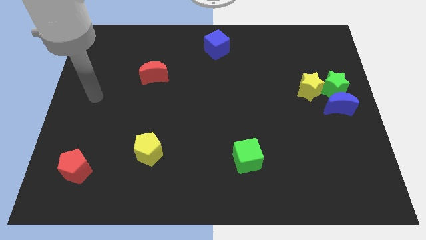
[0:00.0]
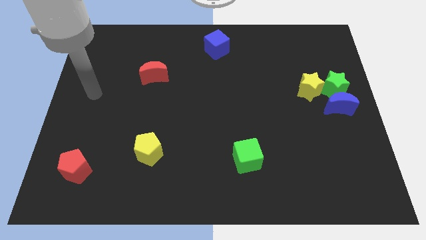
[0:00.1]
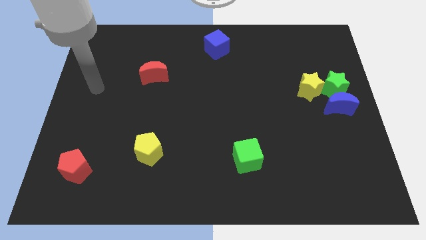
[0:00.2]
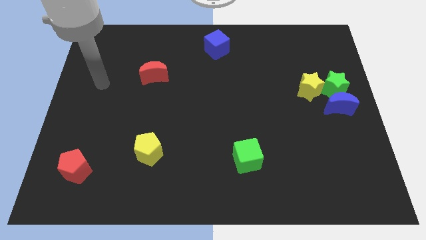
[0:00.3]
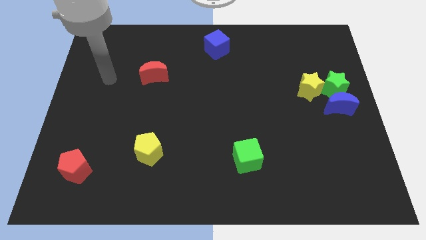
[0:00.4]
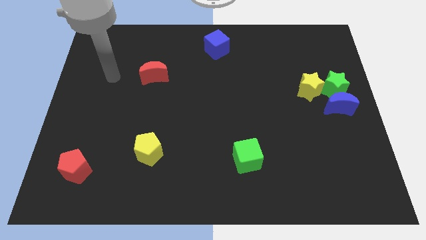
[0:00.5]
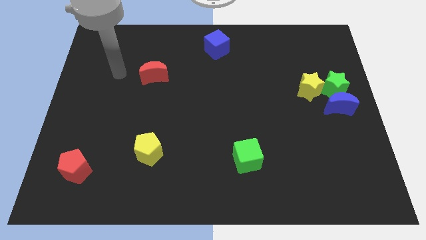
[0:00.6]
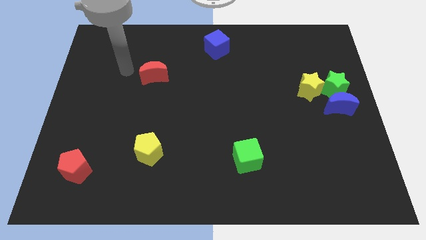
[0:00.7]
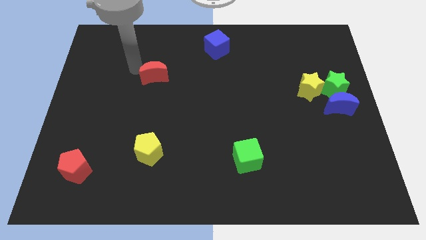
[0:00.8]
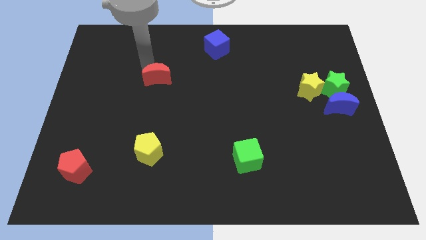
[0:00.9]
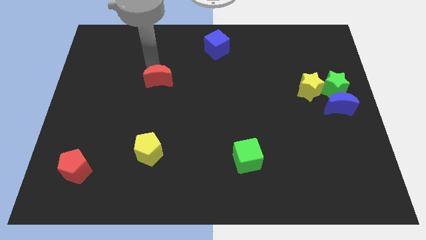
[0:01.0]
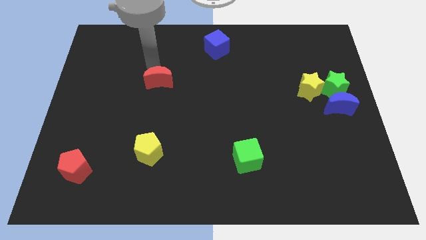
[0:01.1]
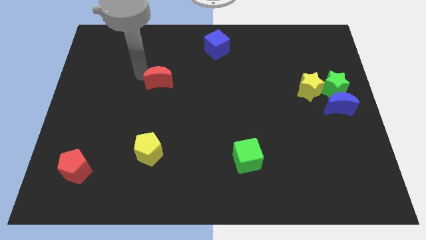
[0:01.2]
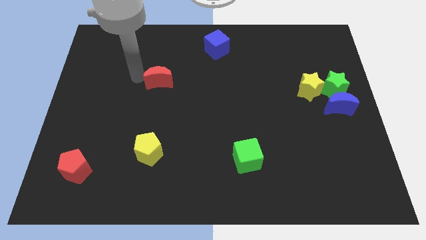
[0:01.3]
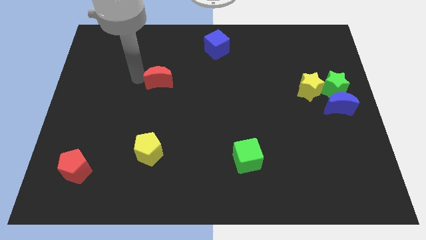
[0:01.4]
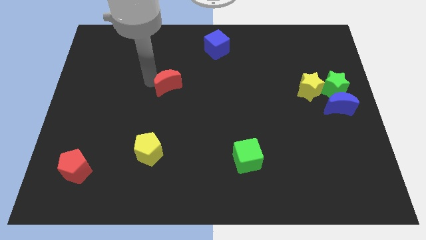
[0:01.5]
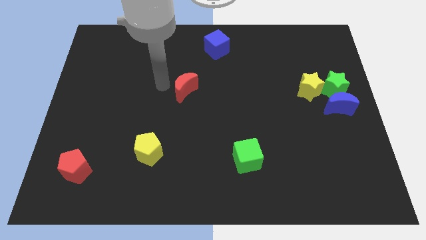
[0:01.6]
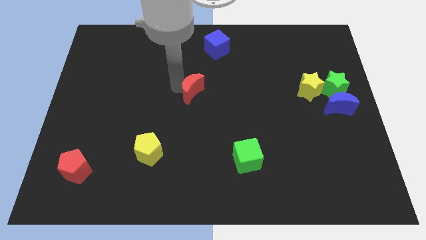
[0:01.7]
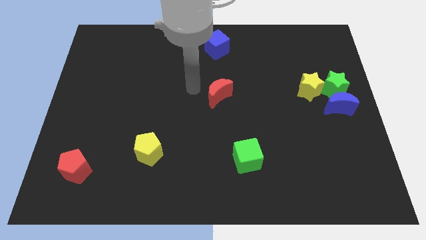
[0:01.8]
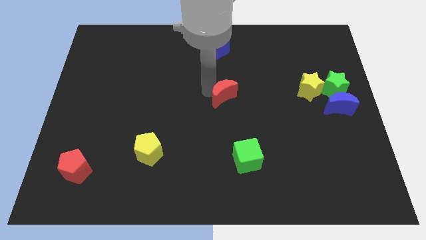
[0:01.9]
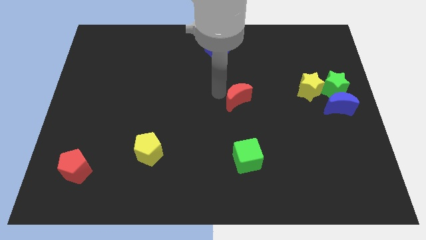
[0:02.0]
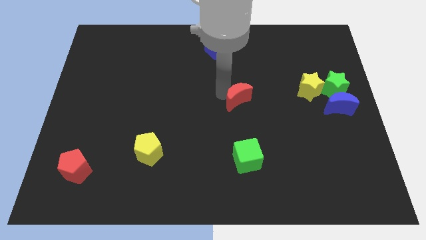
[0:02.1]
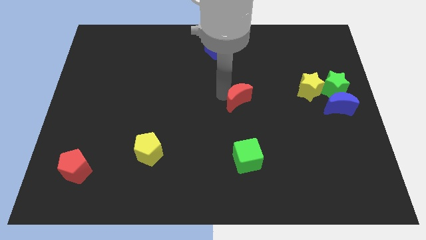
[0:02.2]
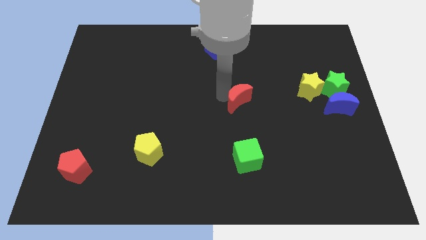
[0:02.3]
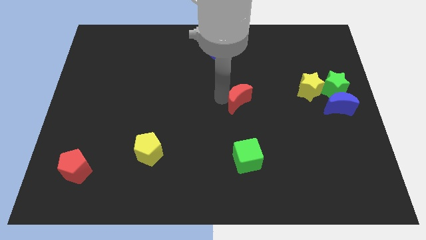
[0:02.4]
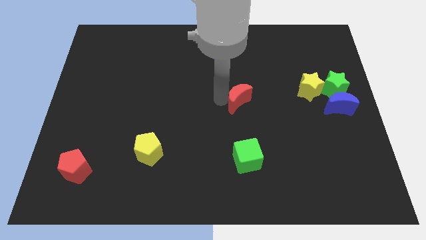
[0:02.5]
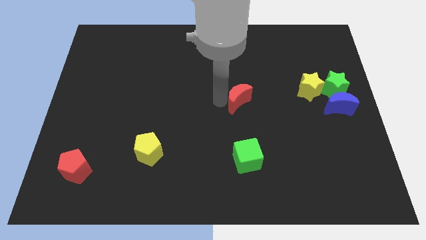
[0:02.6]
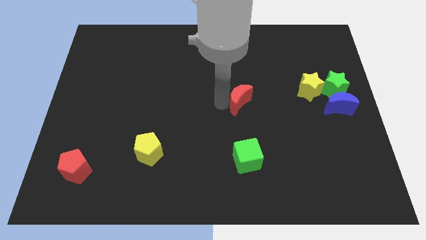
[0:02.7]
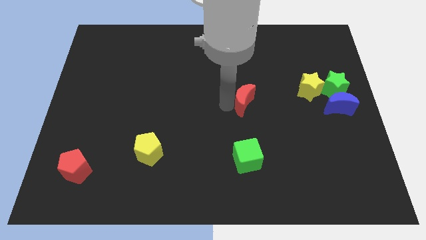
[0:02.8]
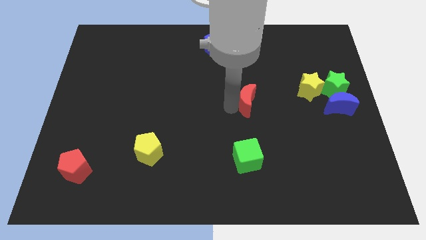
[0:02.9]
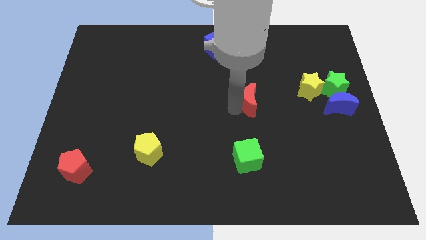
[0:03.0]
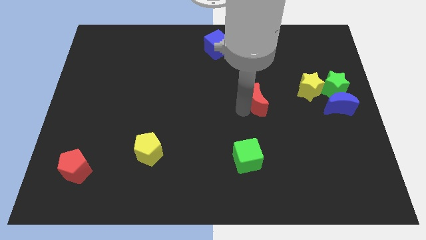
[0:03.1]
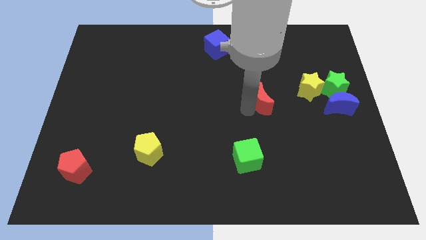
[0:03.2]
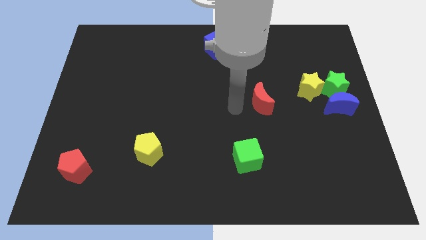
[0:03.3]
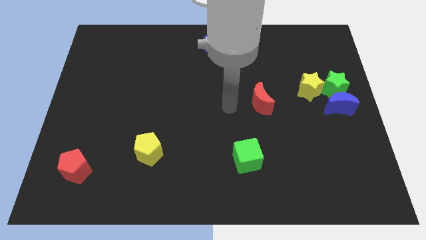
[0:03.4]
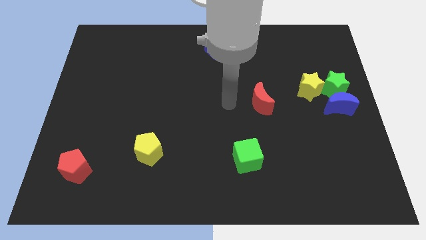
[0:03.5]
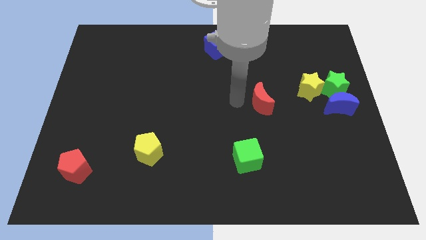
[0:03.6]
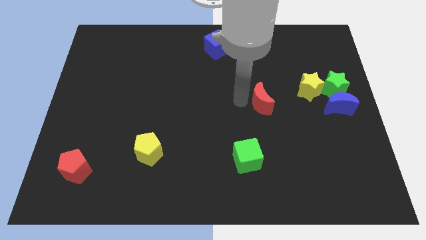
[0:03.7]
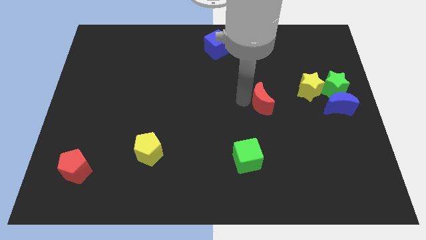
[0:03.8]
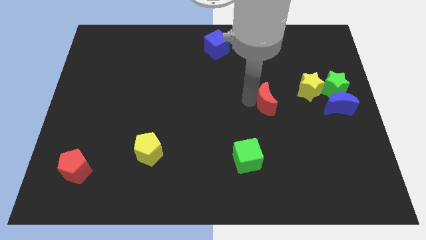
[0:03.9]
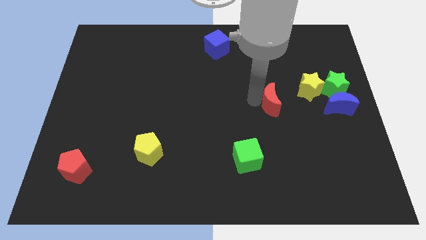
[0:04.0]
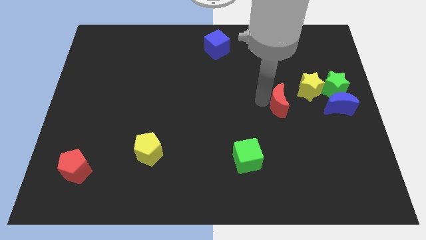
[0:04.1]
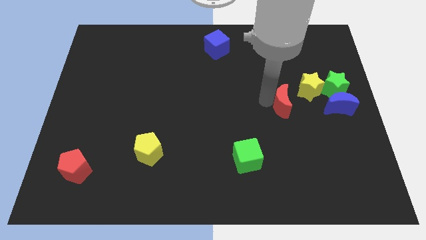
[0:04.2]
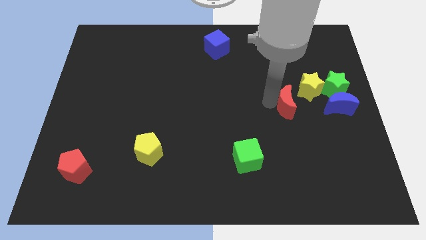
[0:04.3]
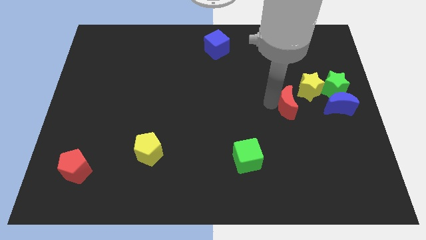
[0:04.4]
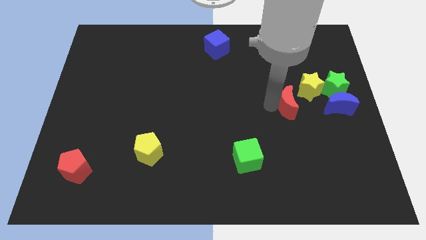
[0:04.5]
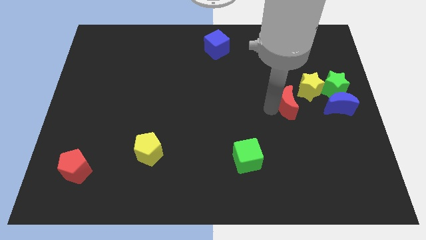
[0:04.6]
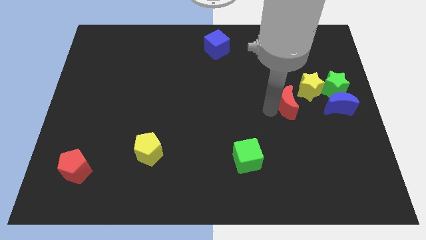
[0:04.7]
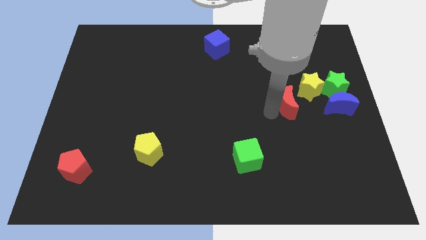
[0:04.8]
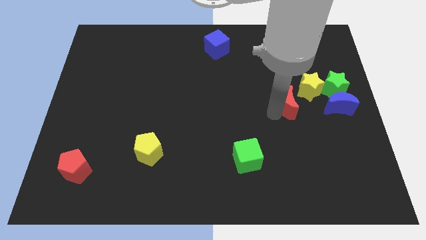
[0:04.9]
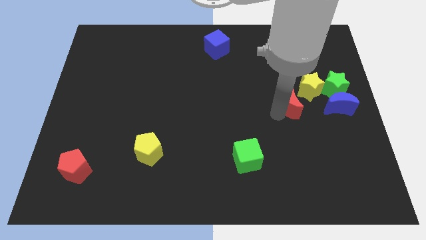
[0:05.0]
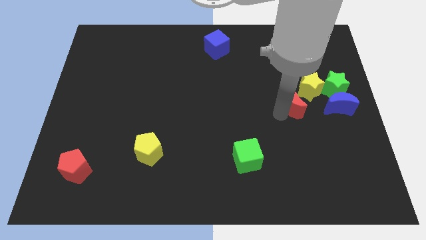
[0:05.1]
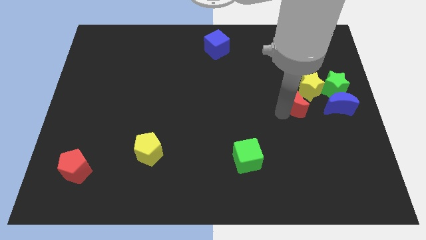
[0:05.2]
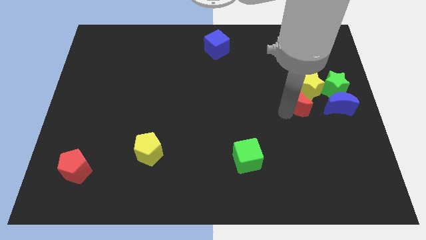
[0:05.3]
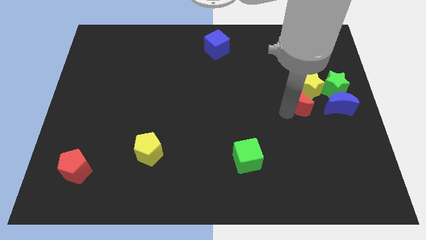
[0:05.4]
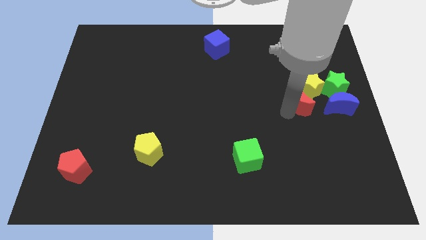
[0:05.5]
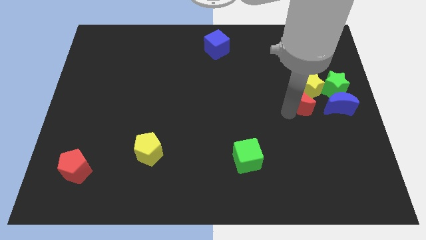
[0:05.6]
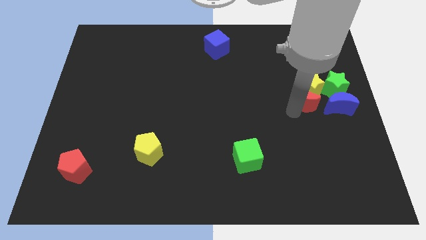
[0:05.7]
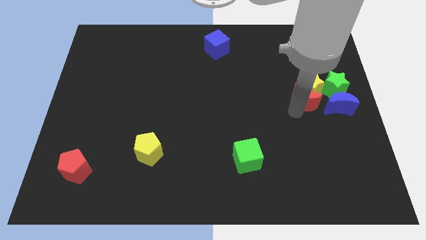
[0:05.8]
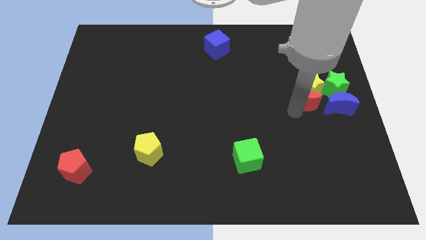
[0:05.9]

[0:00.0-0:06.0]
slide the red crescent into the bottom side of the yellow star

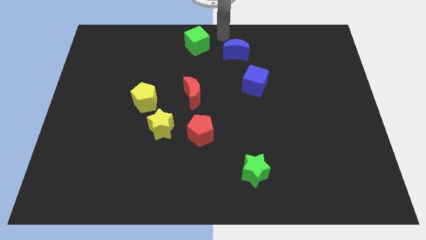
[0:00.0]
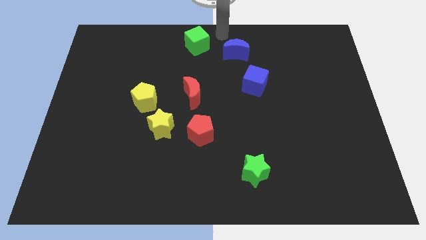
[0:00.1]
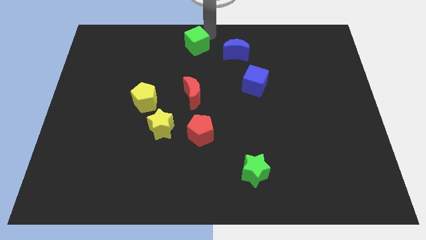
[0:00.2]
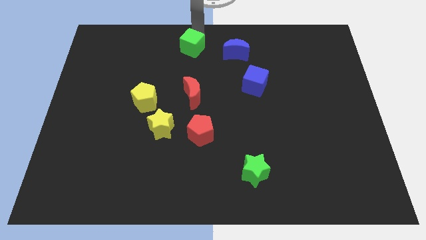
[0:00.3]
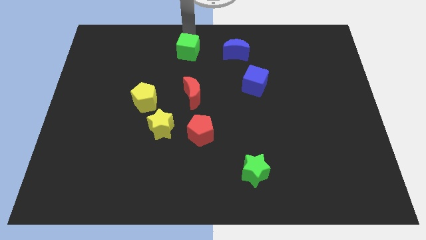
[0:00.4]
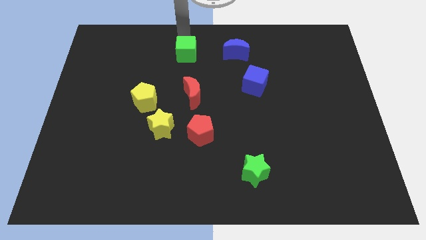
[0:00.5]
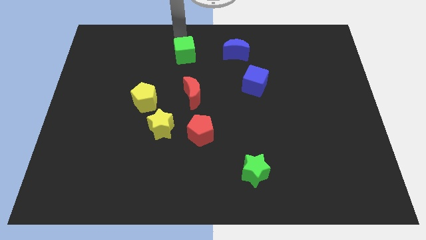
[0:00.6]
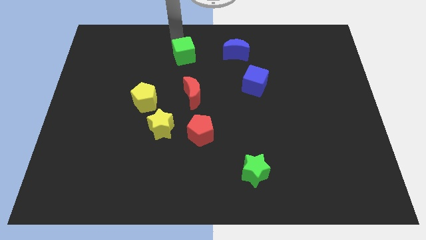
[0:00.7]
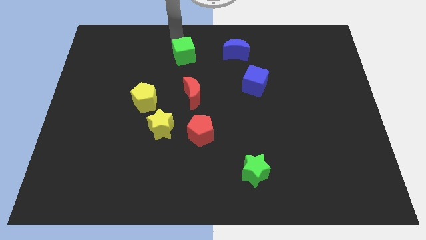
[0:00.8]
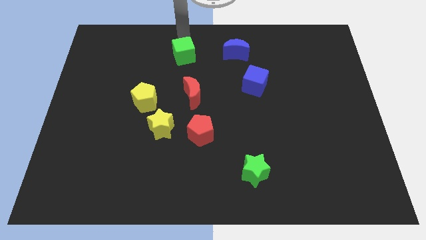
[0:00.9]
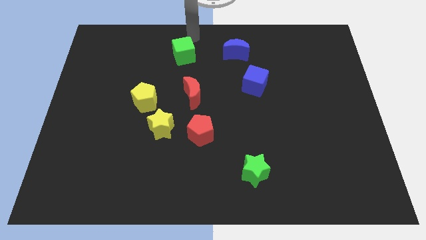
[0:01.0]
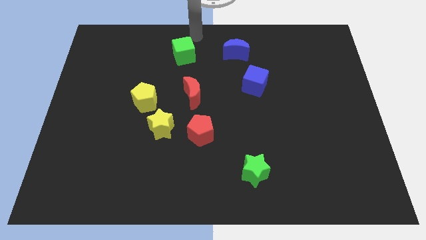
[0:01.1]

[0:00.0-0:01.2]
place the green cube above red moon

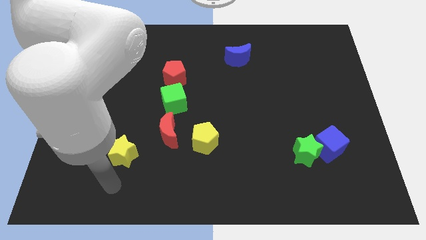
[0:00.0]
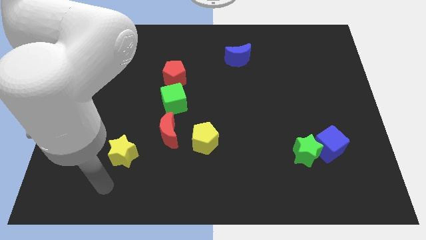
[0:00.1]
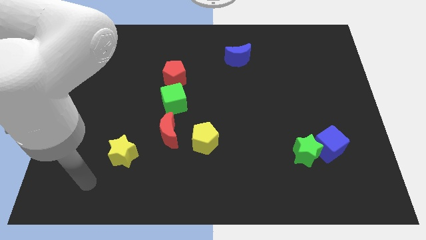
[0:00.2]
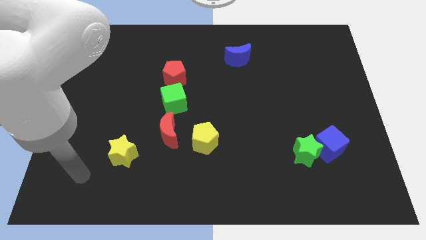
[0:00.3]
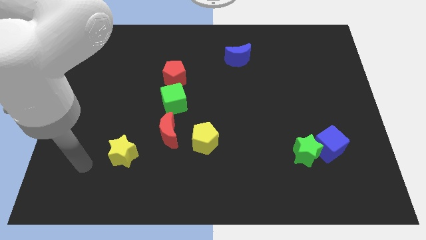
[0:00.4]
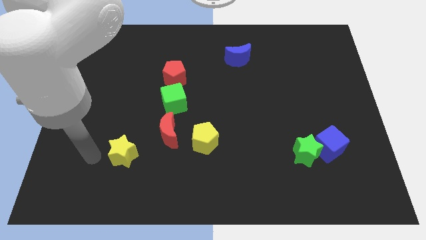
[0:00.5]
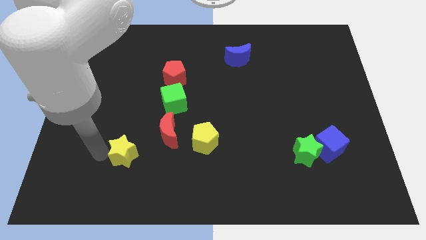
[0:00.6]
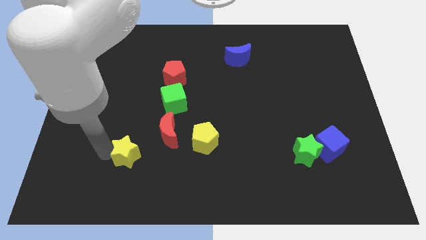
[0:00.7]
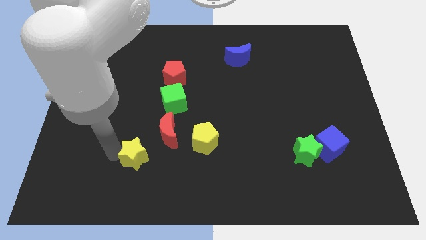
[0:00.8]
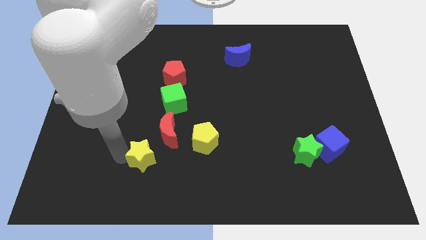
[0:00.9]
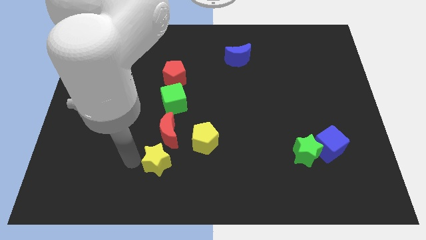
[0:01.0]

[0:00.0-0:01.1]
move yellow star to the bottom left of red moon

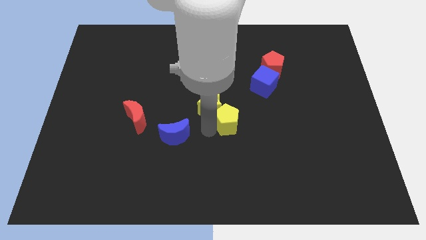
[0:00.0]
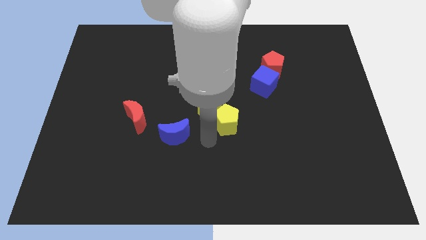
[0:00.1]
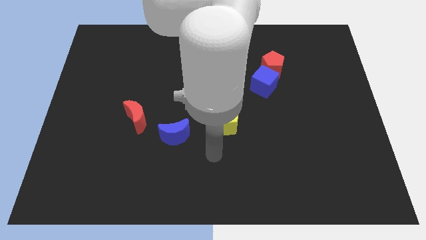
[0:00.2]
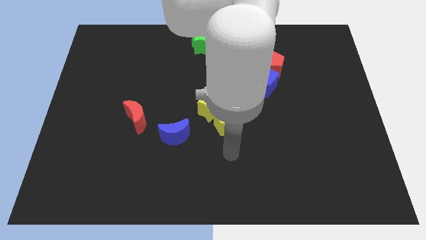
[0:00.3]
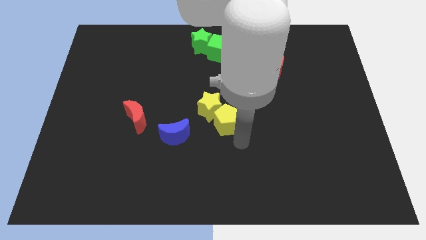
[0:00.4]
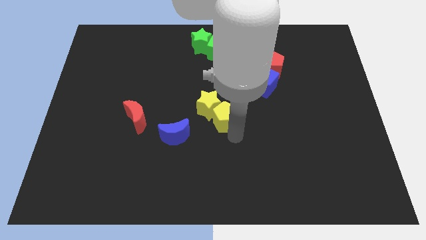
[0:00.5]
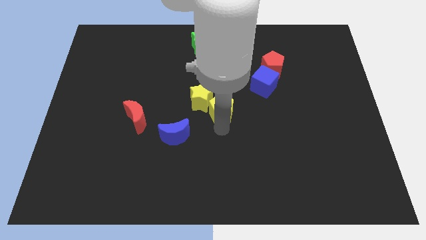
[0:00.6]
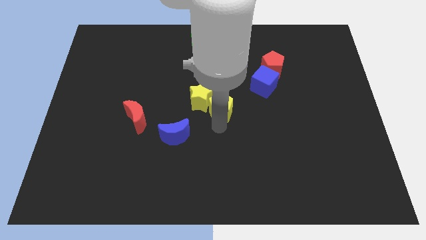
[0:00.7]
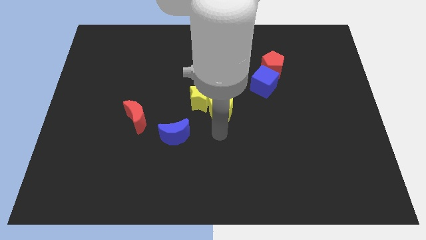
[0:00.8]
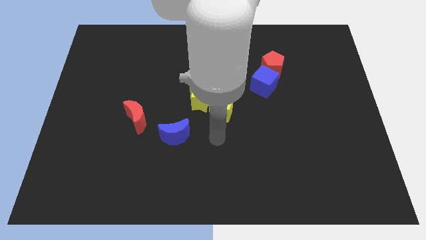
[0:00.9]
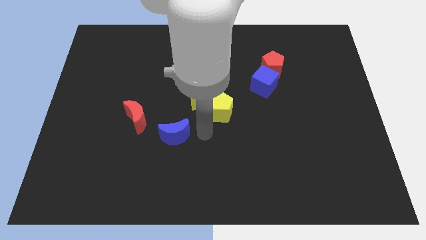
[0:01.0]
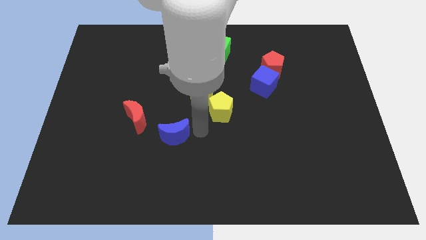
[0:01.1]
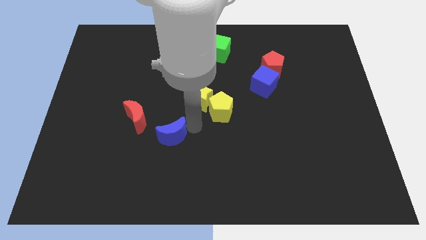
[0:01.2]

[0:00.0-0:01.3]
push the yellow blocks towards the center of the board
